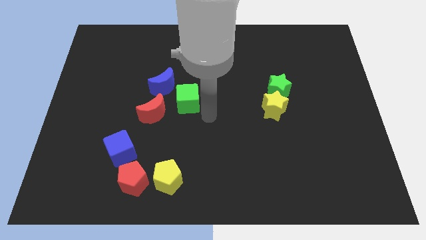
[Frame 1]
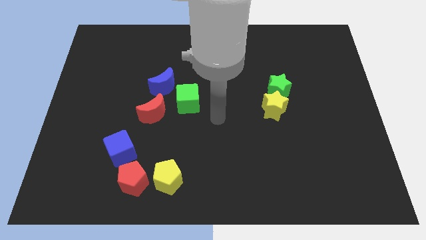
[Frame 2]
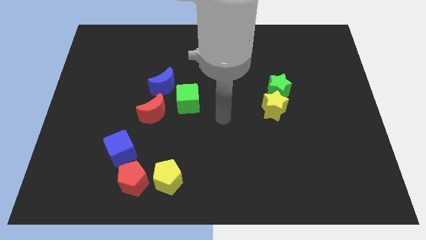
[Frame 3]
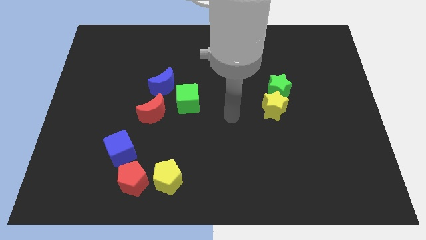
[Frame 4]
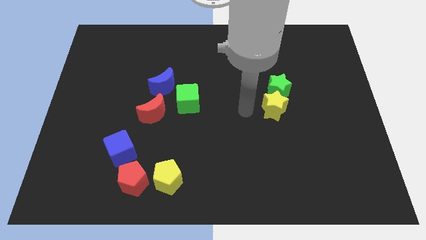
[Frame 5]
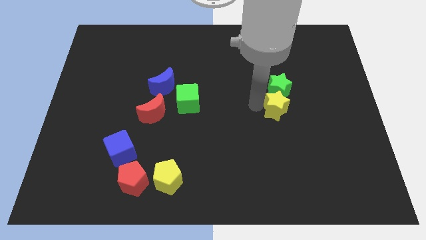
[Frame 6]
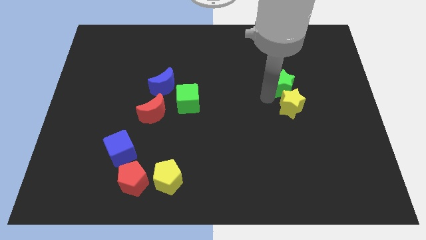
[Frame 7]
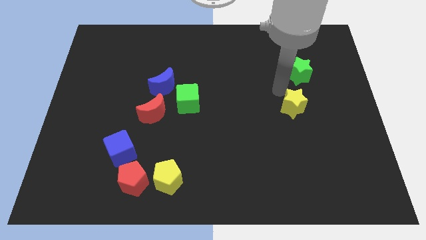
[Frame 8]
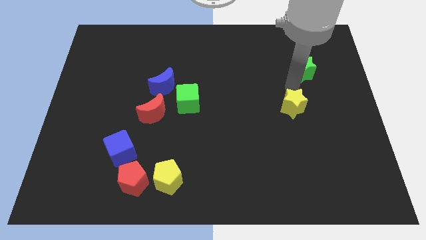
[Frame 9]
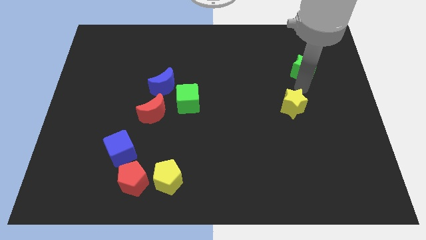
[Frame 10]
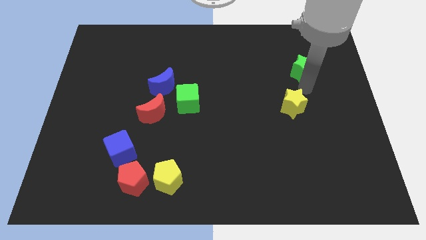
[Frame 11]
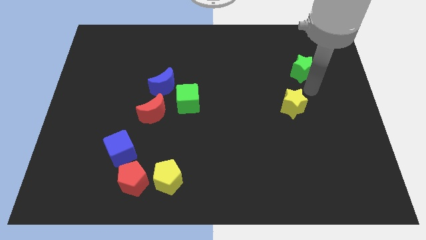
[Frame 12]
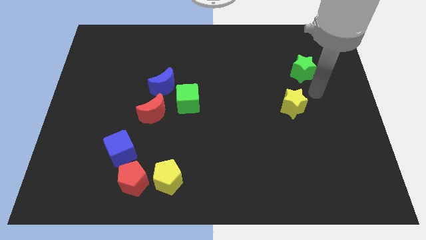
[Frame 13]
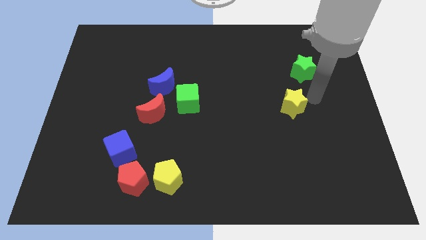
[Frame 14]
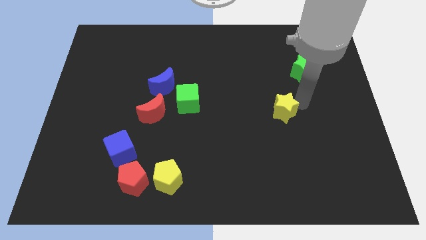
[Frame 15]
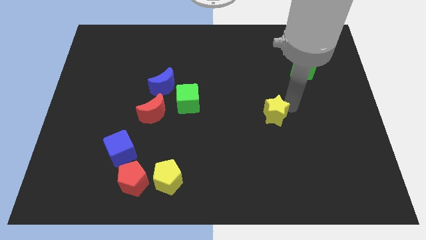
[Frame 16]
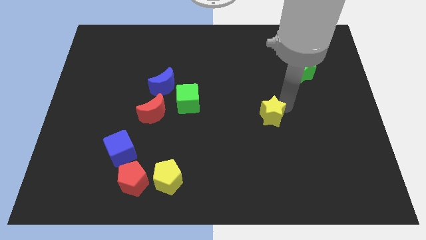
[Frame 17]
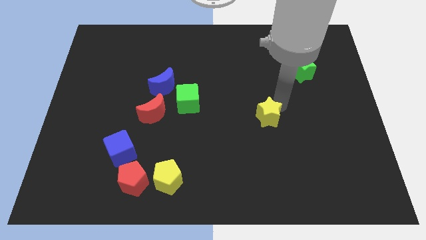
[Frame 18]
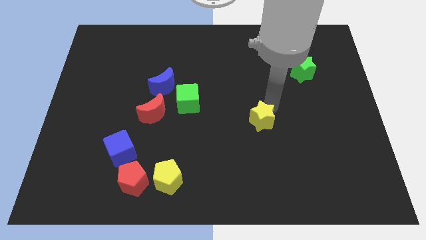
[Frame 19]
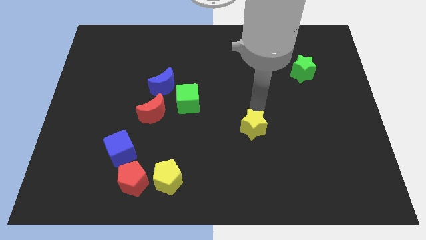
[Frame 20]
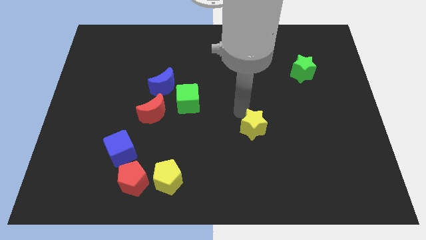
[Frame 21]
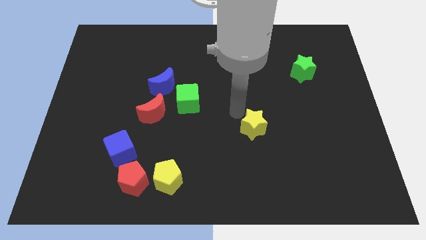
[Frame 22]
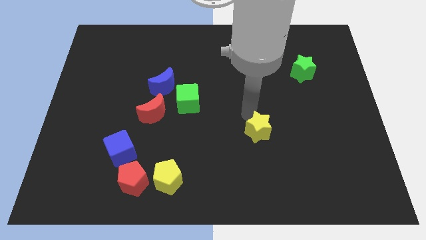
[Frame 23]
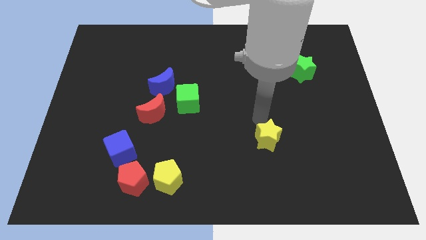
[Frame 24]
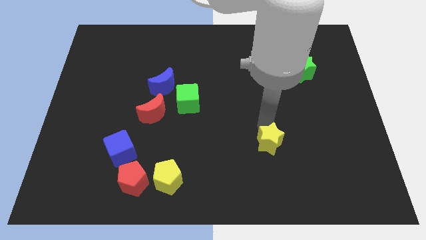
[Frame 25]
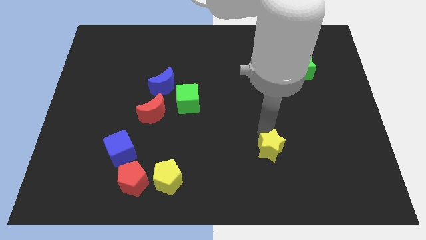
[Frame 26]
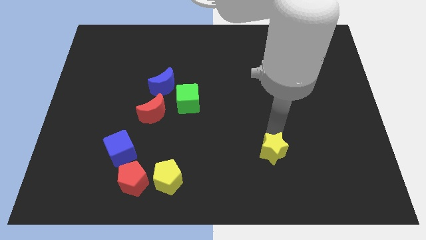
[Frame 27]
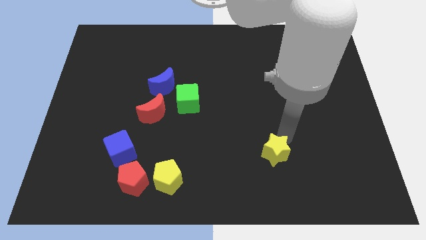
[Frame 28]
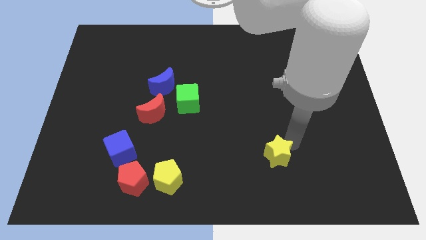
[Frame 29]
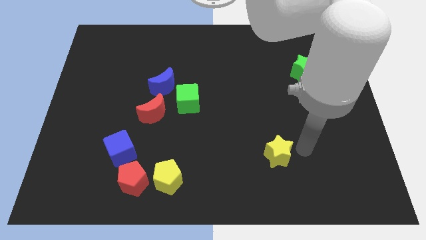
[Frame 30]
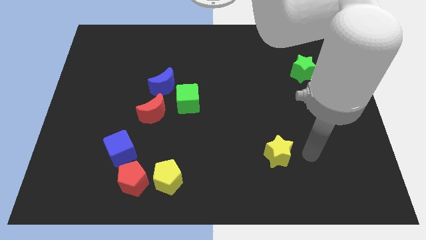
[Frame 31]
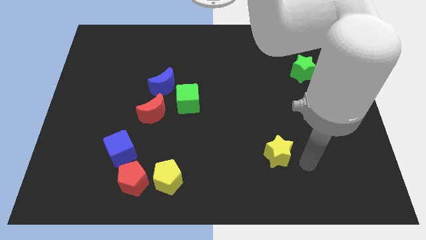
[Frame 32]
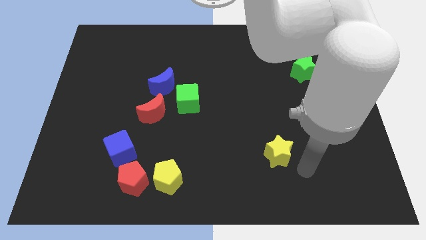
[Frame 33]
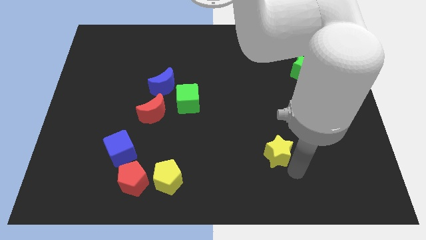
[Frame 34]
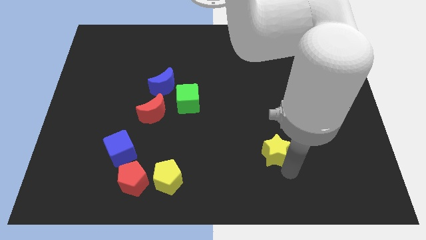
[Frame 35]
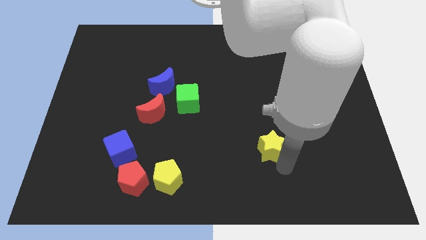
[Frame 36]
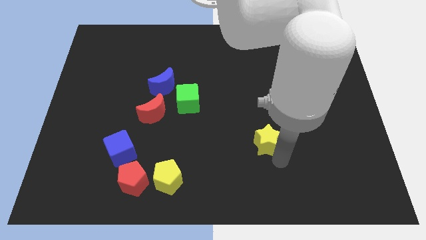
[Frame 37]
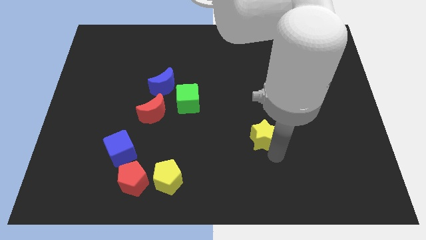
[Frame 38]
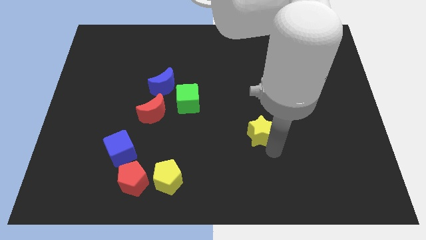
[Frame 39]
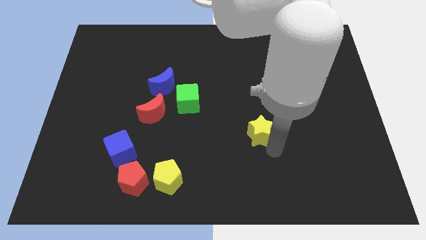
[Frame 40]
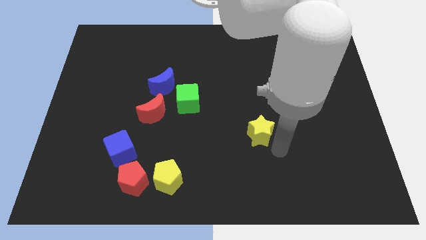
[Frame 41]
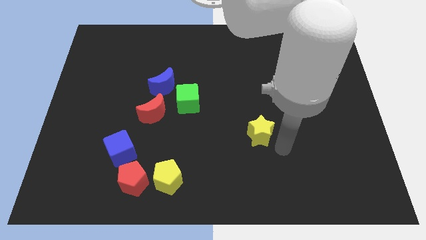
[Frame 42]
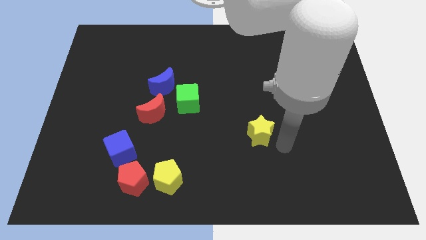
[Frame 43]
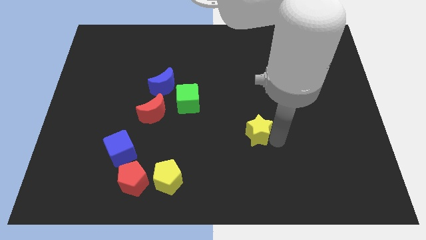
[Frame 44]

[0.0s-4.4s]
separate the yellow star from the green star

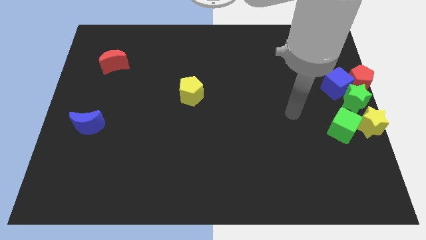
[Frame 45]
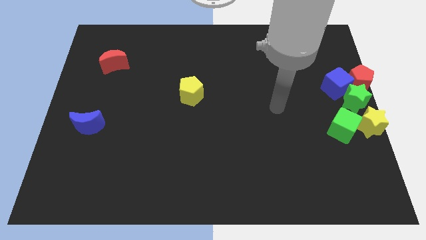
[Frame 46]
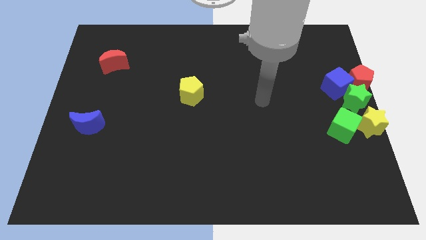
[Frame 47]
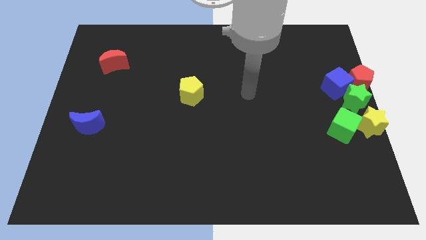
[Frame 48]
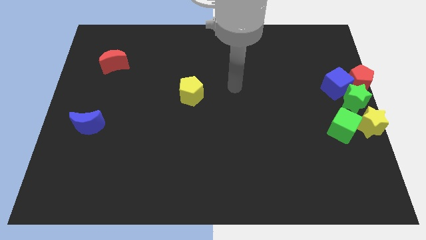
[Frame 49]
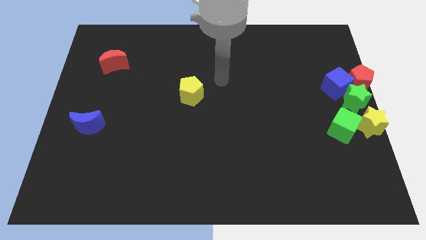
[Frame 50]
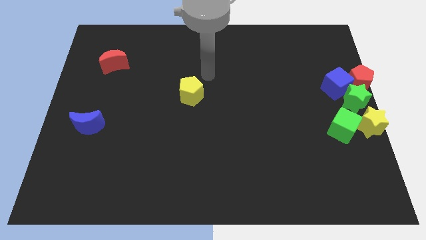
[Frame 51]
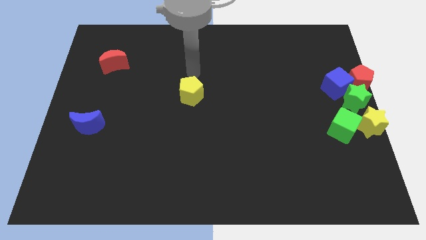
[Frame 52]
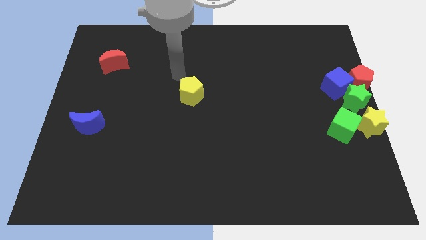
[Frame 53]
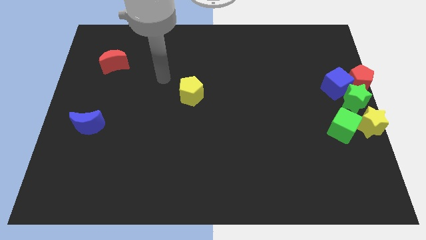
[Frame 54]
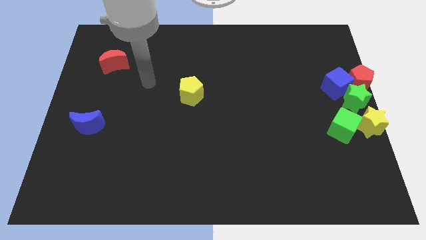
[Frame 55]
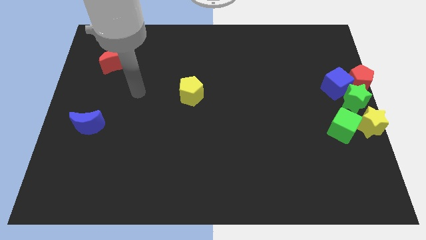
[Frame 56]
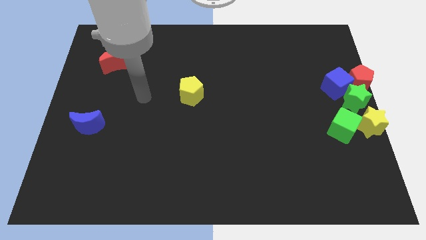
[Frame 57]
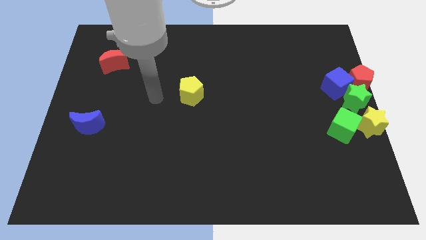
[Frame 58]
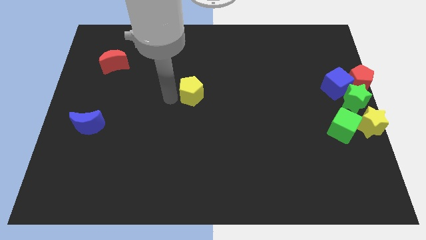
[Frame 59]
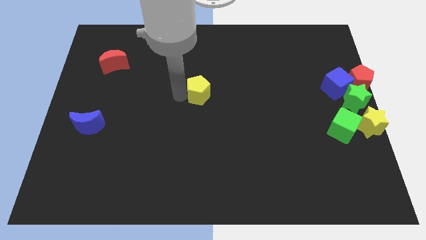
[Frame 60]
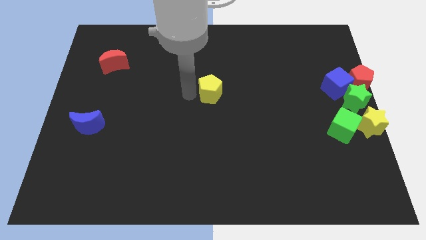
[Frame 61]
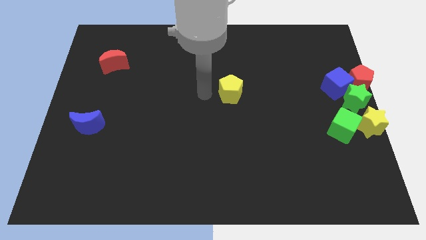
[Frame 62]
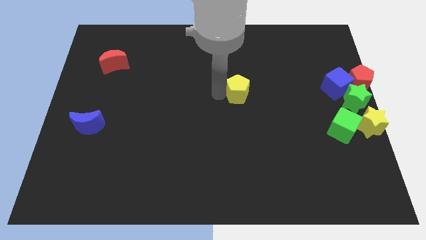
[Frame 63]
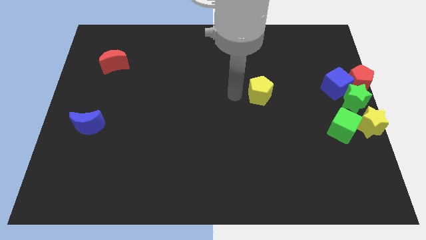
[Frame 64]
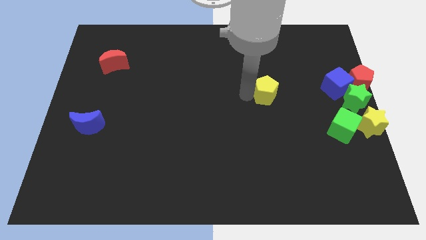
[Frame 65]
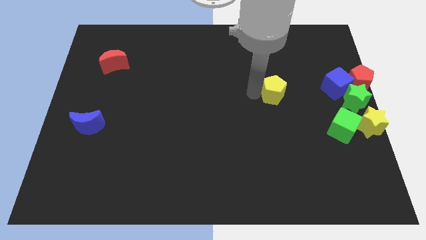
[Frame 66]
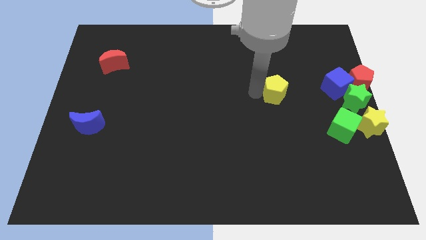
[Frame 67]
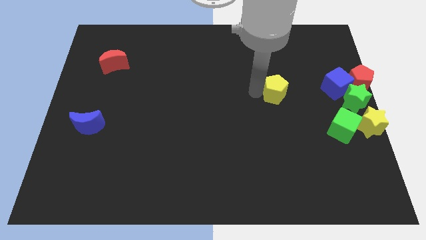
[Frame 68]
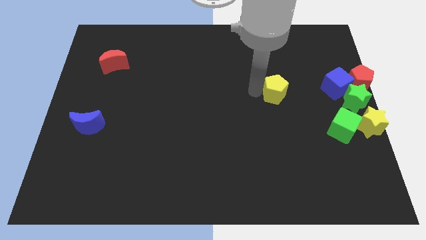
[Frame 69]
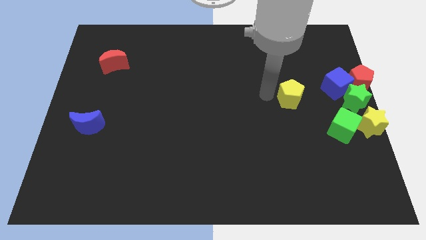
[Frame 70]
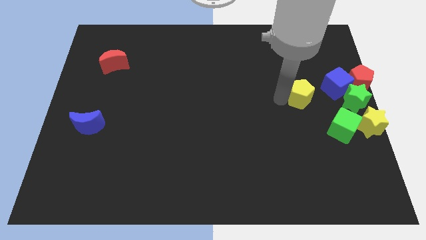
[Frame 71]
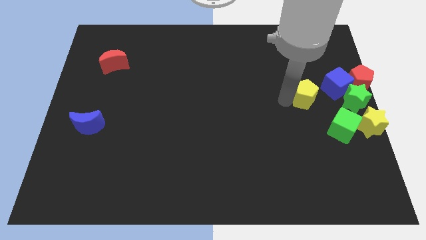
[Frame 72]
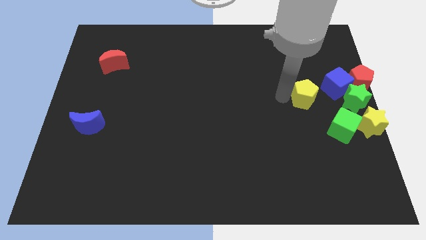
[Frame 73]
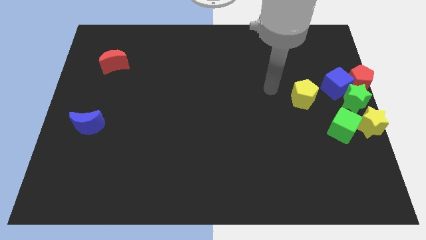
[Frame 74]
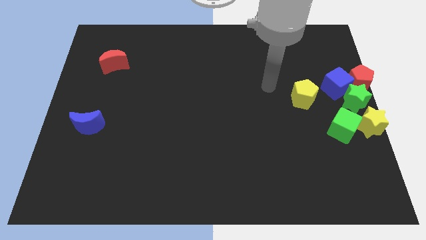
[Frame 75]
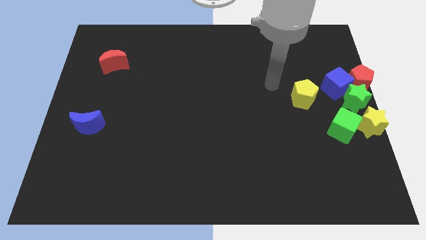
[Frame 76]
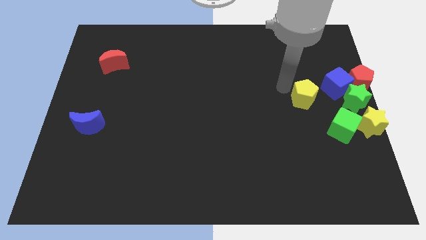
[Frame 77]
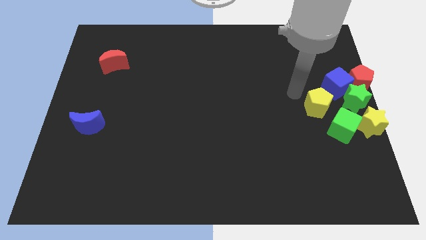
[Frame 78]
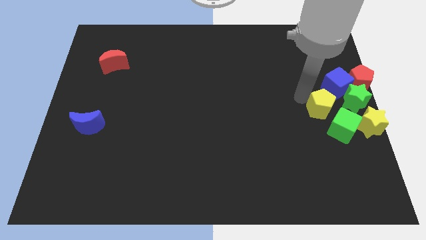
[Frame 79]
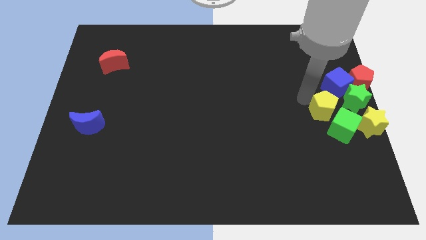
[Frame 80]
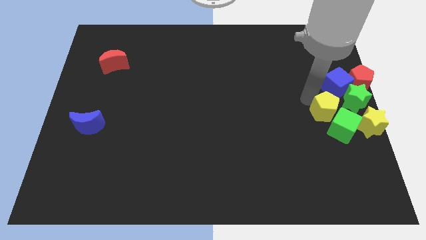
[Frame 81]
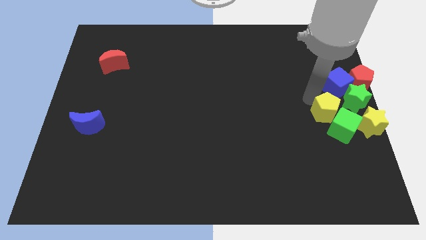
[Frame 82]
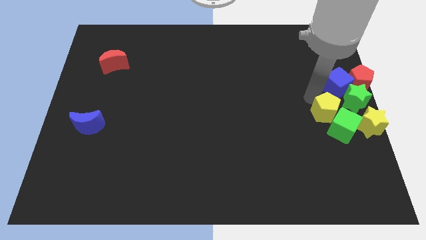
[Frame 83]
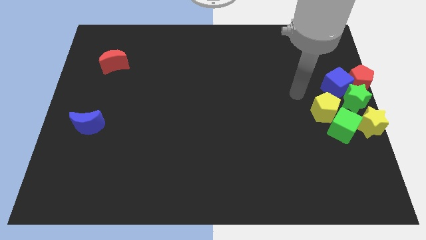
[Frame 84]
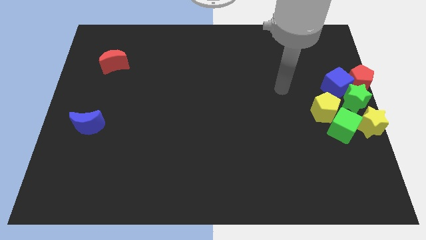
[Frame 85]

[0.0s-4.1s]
push the yellow pentagon to the center right of the board

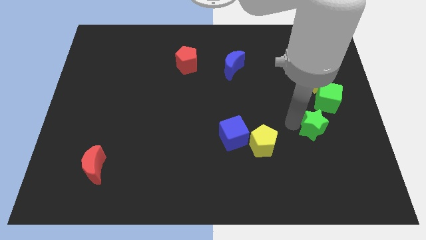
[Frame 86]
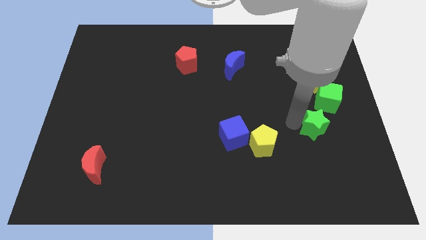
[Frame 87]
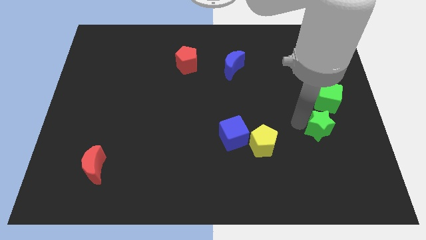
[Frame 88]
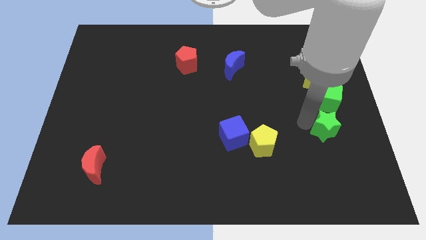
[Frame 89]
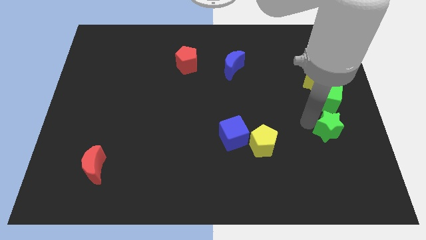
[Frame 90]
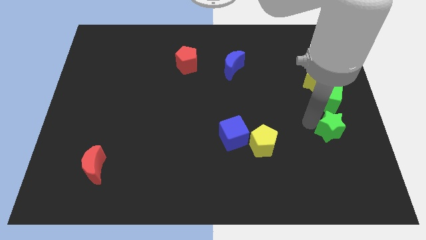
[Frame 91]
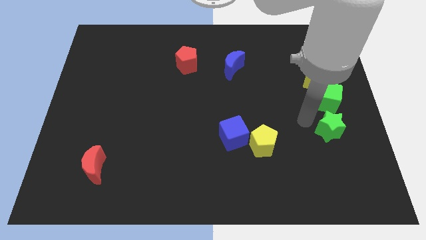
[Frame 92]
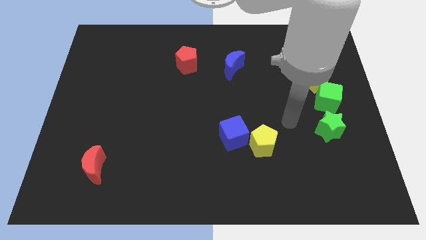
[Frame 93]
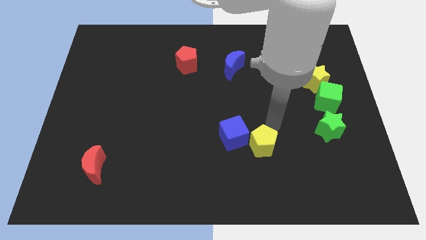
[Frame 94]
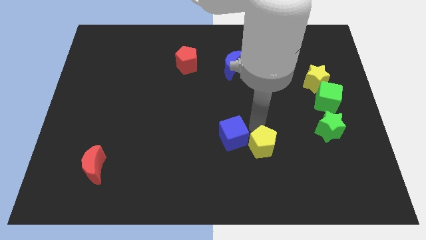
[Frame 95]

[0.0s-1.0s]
place the green star slightly towards right center
